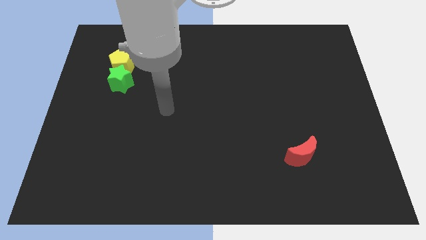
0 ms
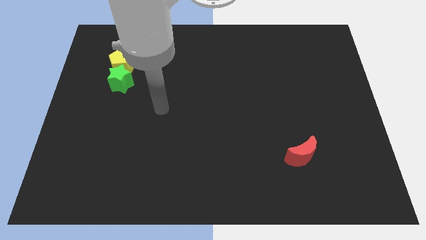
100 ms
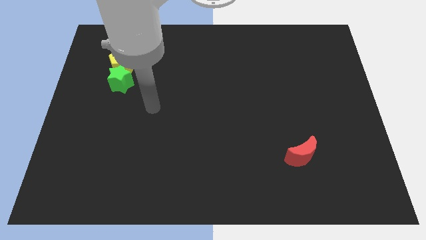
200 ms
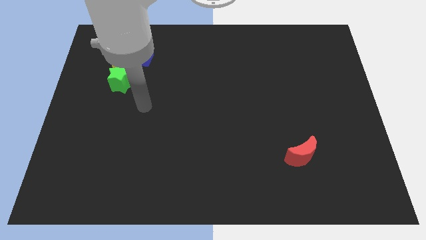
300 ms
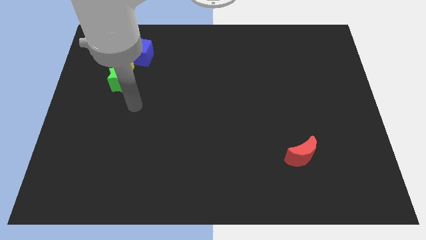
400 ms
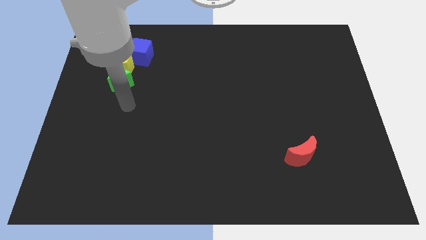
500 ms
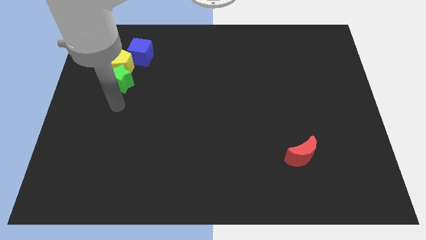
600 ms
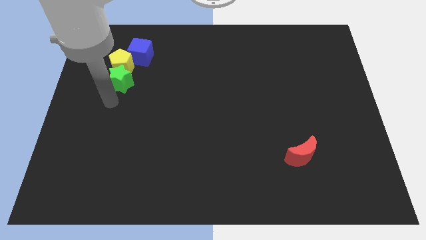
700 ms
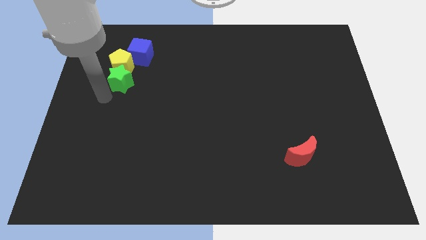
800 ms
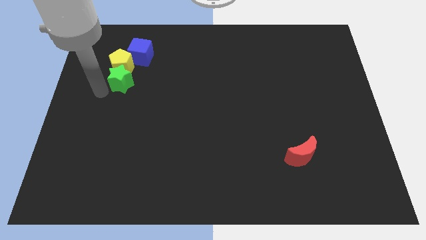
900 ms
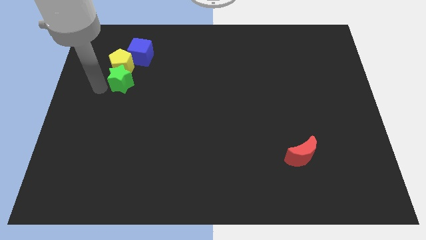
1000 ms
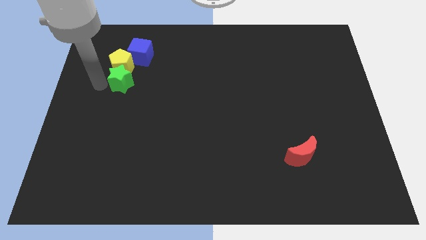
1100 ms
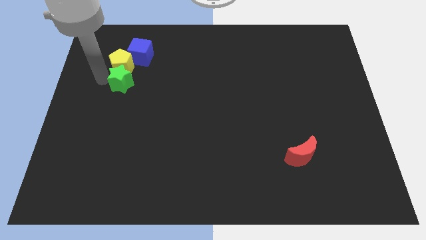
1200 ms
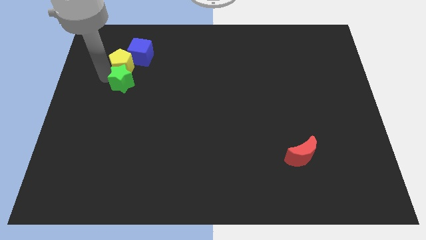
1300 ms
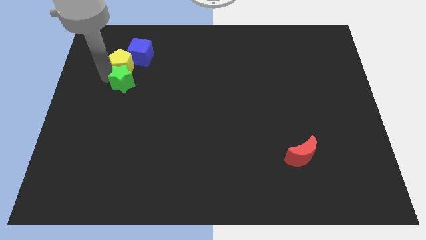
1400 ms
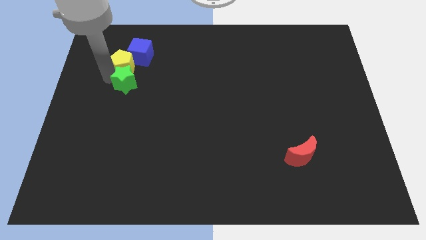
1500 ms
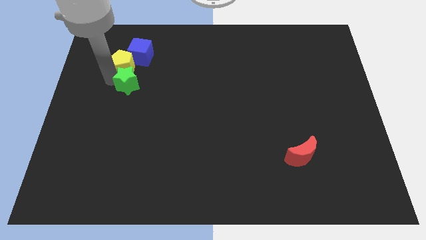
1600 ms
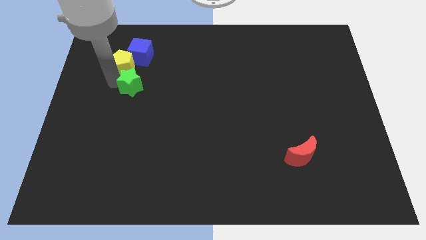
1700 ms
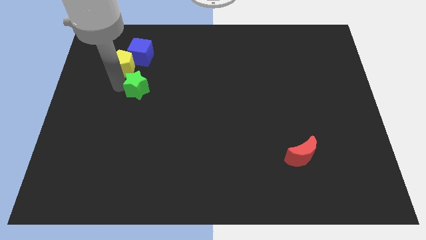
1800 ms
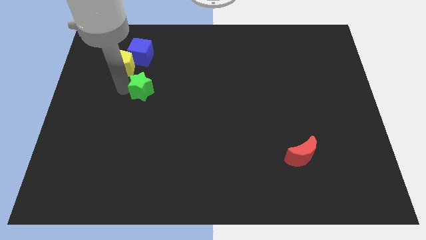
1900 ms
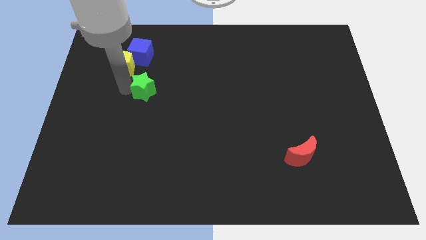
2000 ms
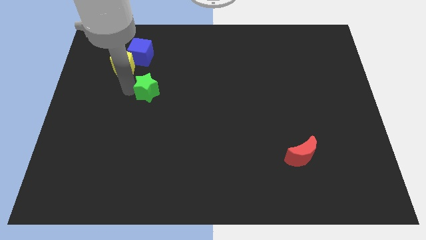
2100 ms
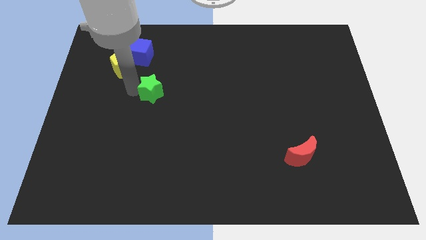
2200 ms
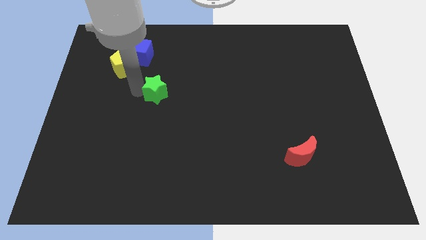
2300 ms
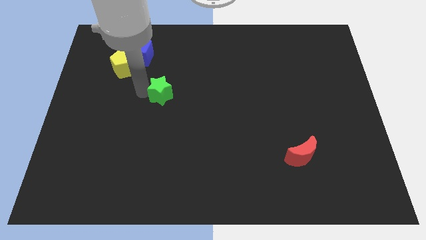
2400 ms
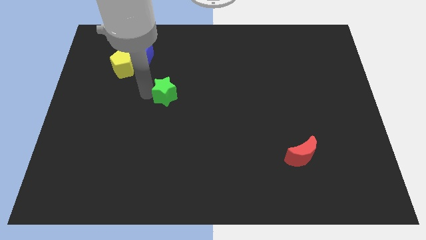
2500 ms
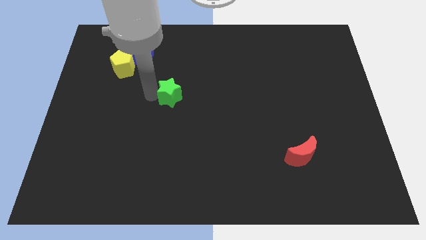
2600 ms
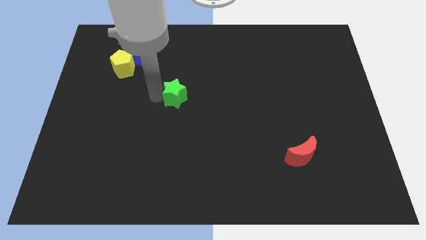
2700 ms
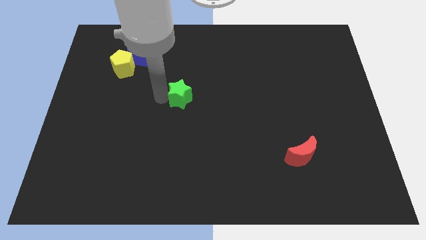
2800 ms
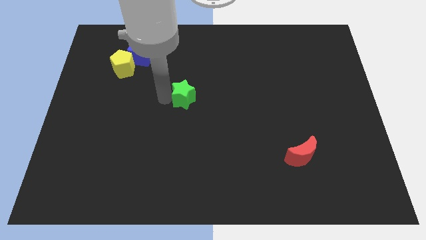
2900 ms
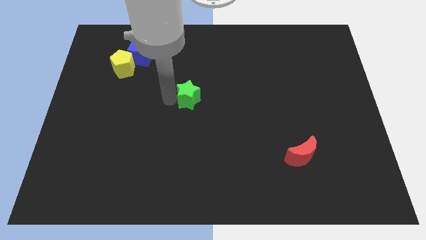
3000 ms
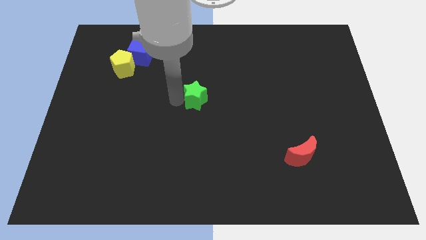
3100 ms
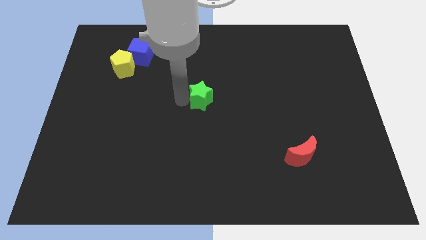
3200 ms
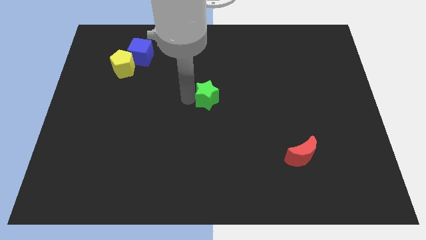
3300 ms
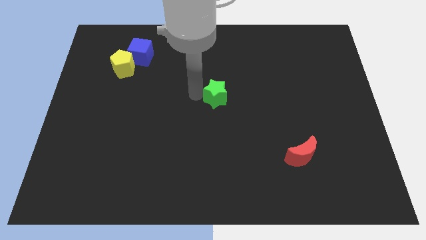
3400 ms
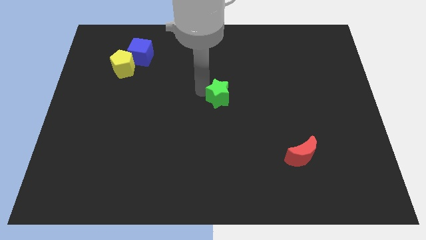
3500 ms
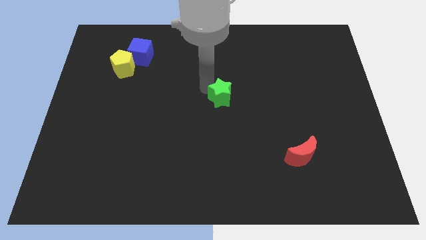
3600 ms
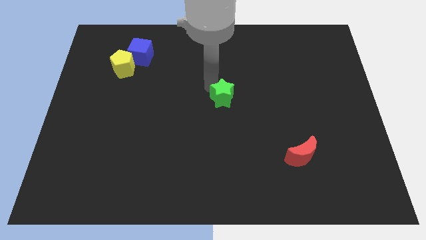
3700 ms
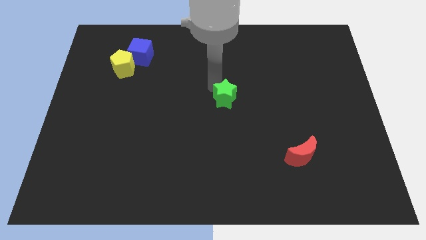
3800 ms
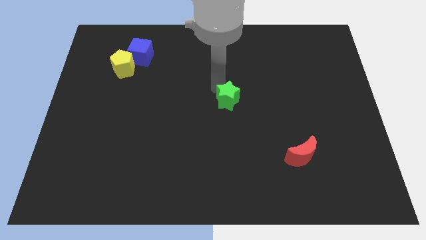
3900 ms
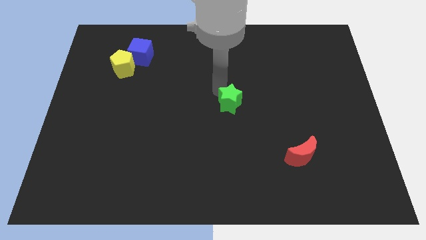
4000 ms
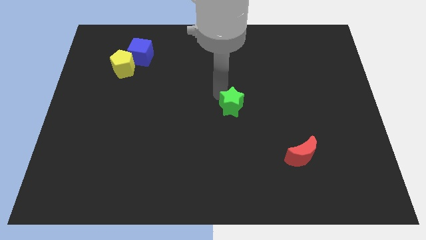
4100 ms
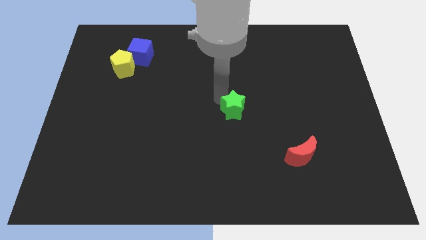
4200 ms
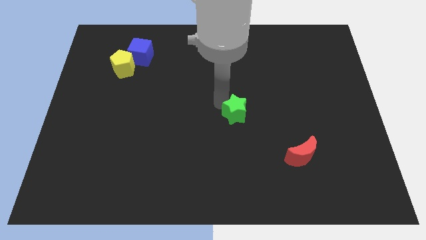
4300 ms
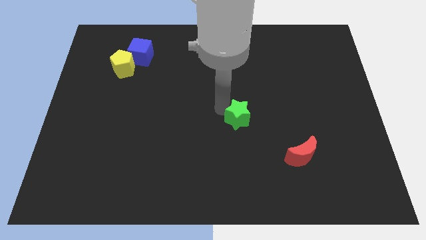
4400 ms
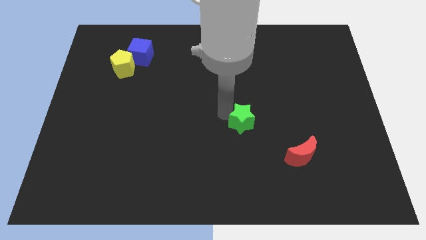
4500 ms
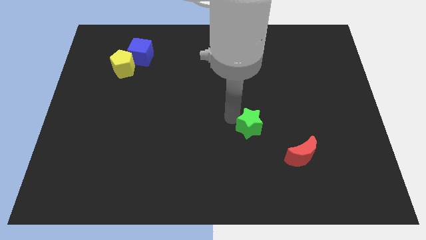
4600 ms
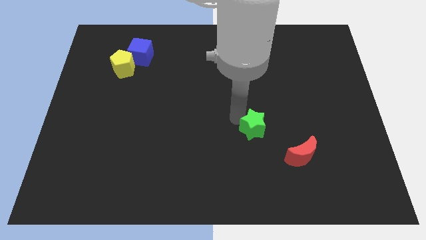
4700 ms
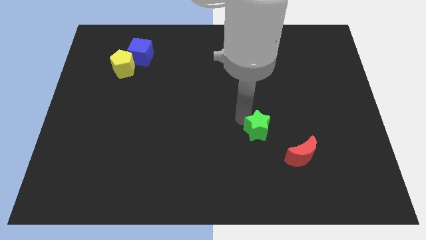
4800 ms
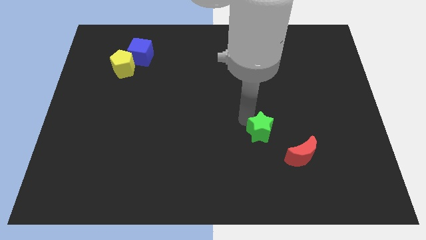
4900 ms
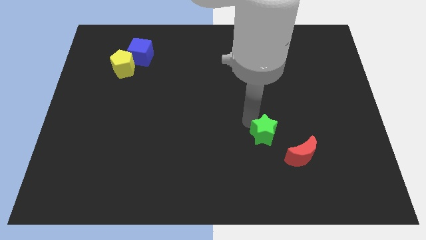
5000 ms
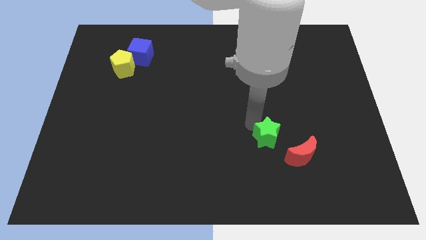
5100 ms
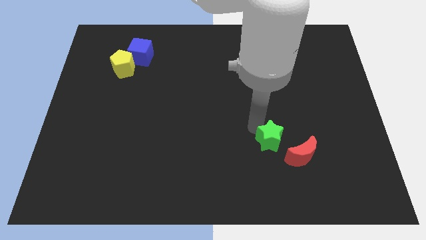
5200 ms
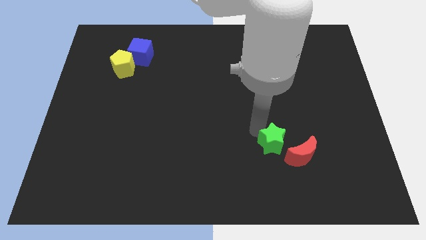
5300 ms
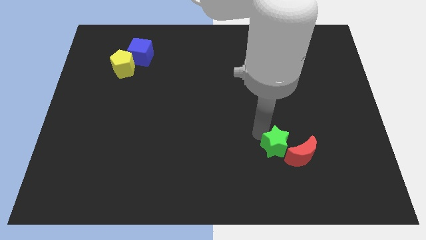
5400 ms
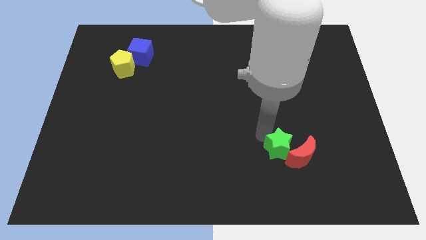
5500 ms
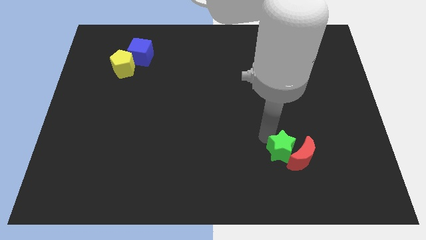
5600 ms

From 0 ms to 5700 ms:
put the green star towards the moon

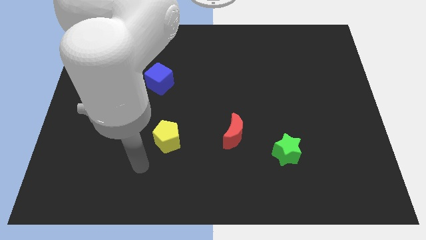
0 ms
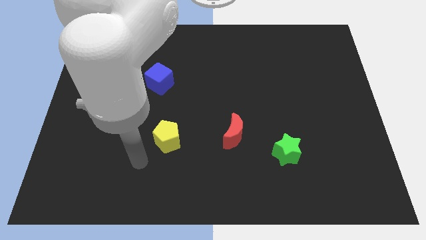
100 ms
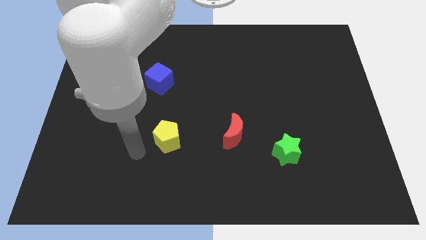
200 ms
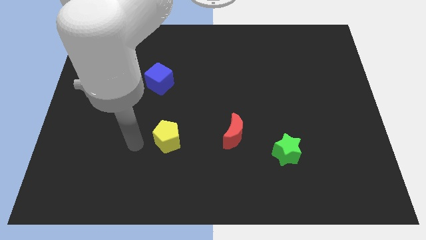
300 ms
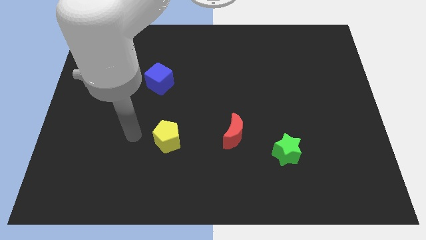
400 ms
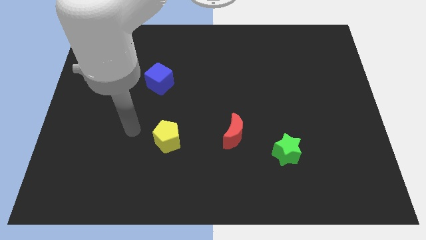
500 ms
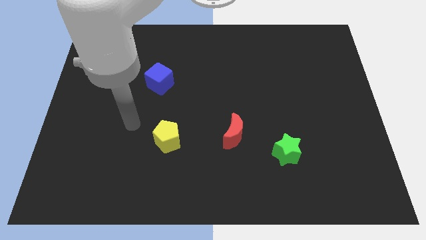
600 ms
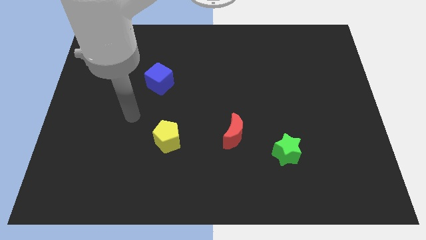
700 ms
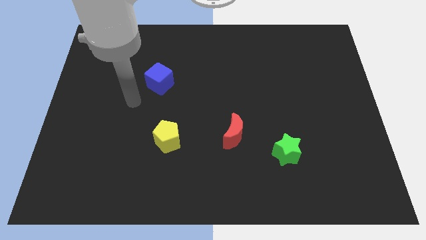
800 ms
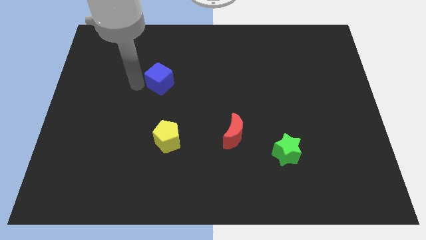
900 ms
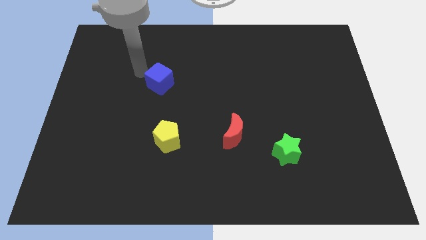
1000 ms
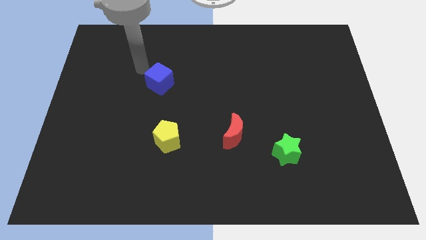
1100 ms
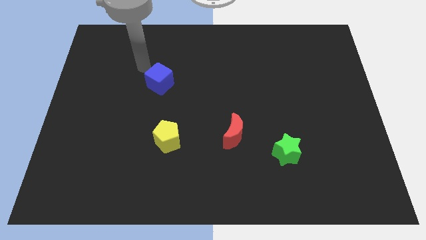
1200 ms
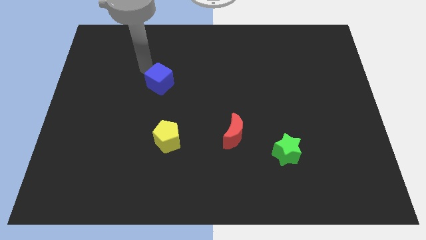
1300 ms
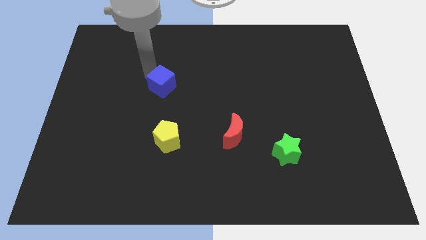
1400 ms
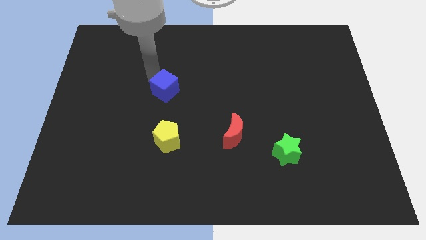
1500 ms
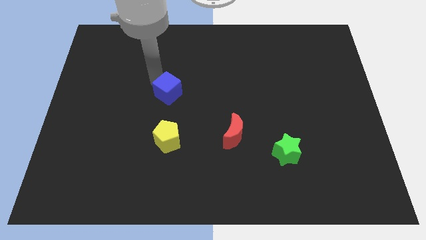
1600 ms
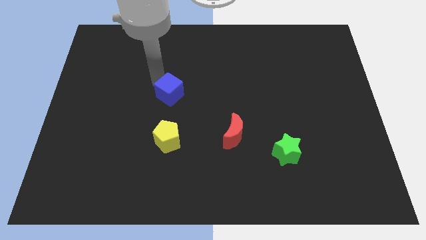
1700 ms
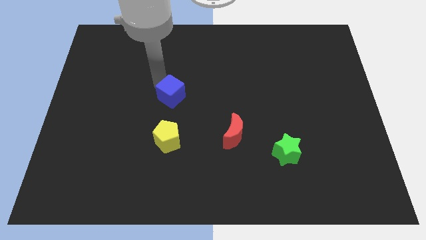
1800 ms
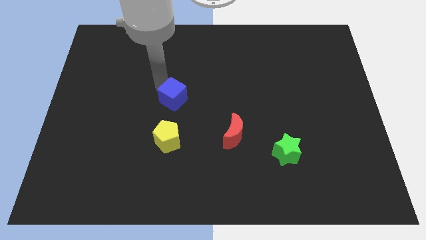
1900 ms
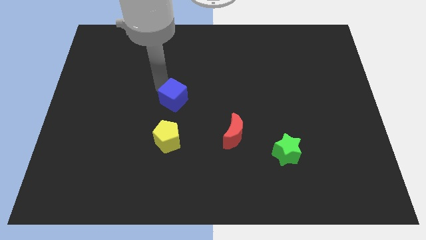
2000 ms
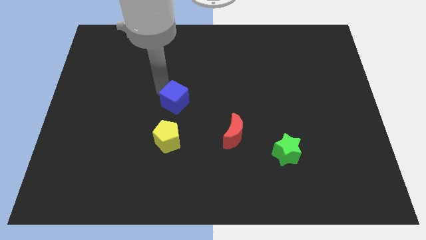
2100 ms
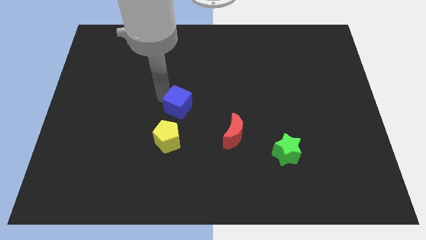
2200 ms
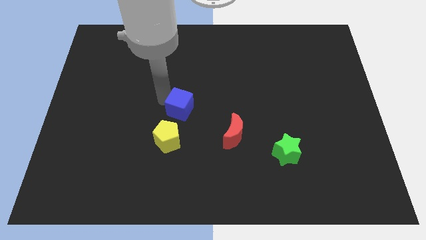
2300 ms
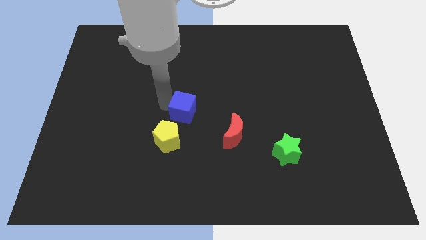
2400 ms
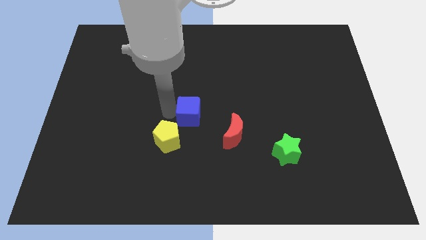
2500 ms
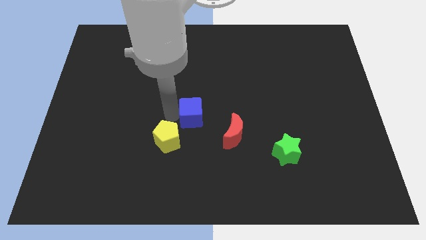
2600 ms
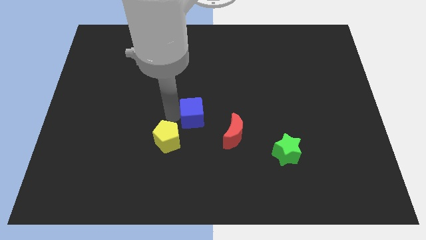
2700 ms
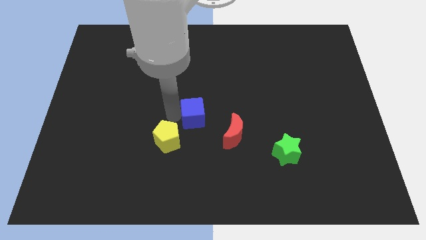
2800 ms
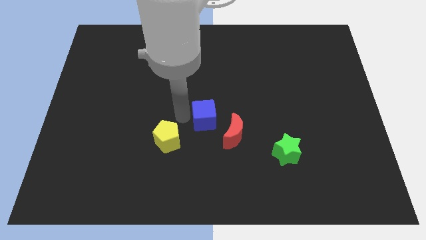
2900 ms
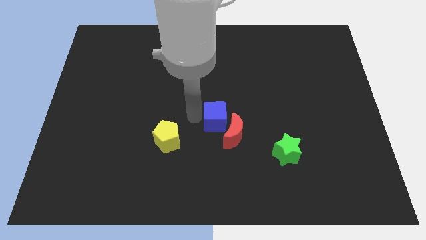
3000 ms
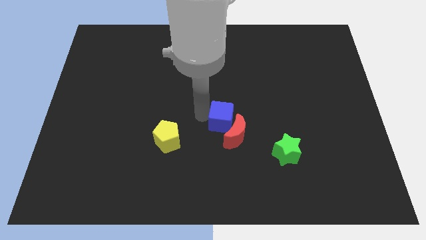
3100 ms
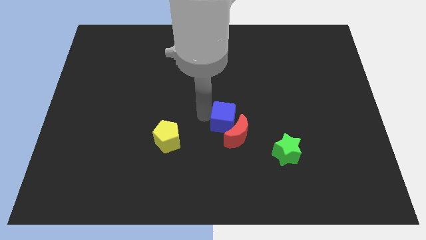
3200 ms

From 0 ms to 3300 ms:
push the cube to the red moon

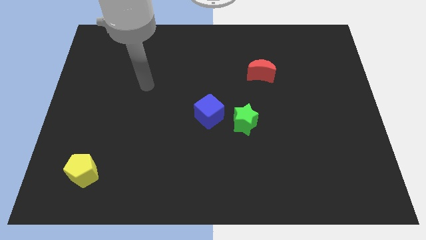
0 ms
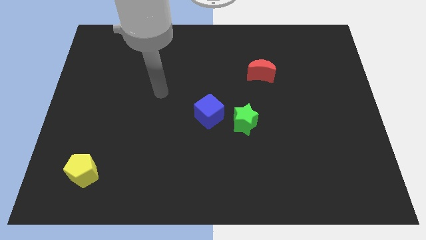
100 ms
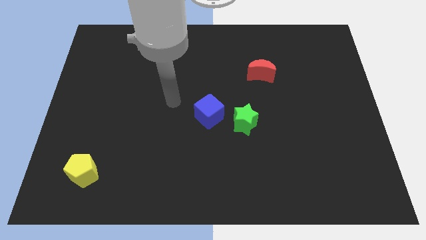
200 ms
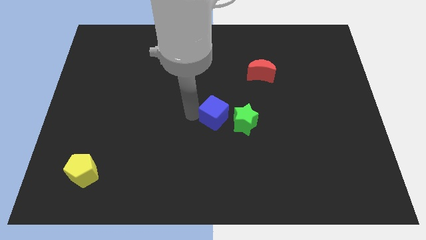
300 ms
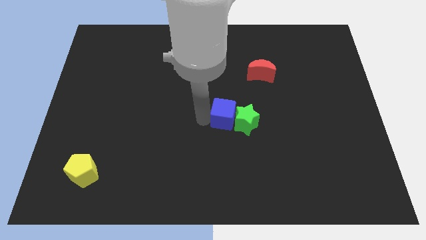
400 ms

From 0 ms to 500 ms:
push the cube to the green block
